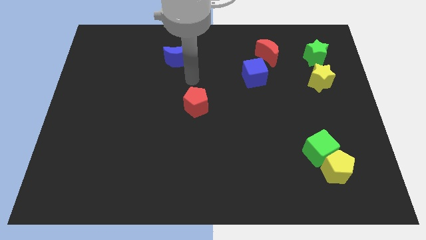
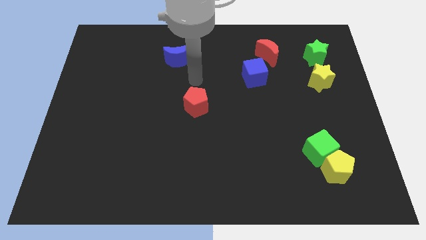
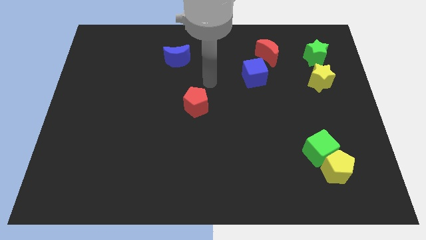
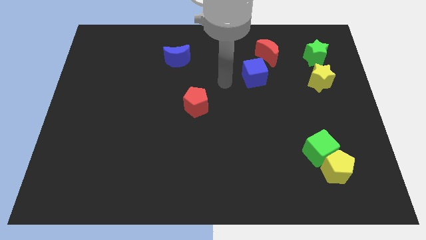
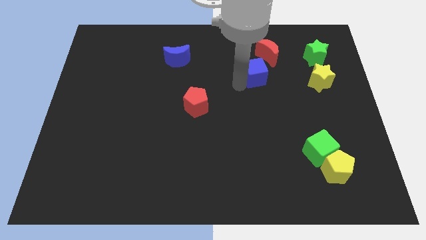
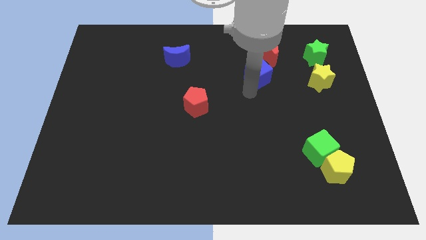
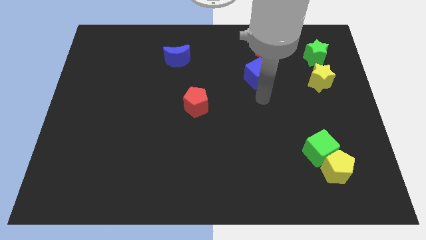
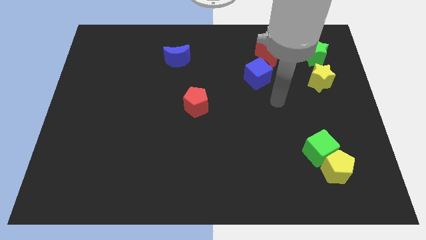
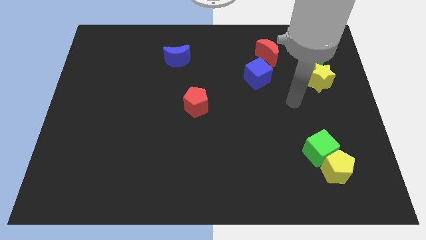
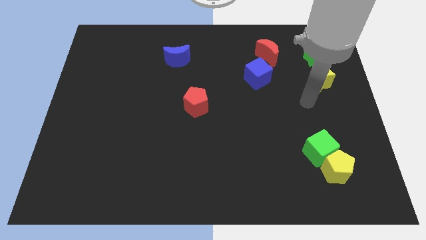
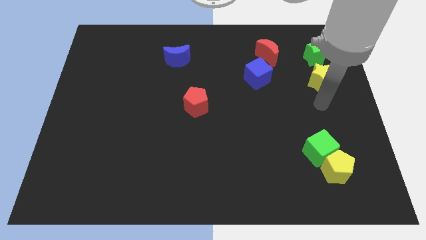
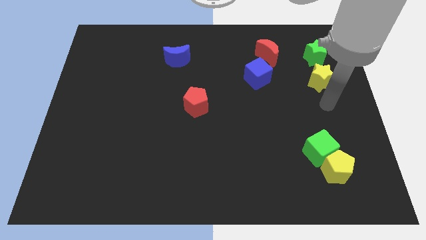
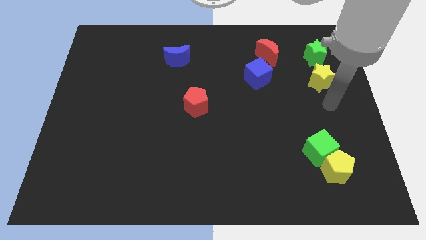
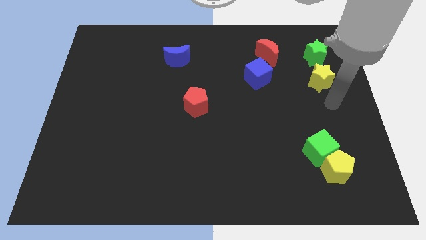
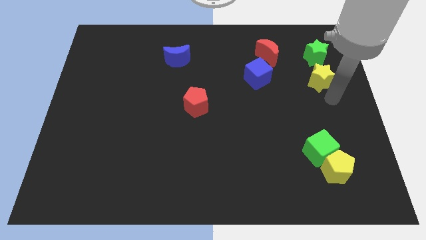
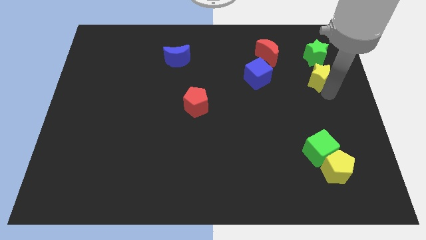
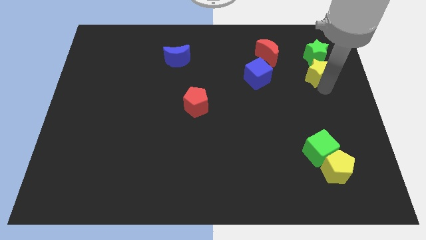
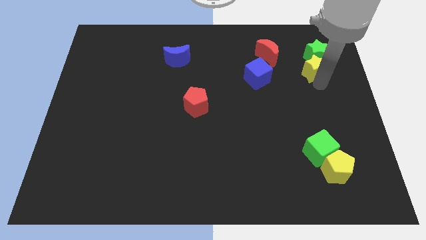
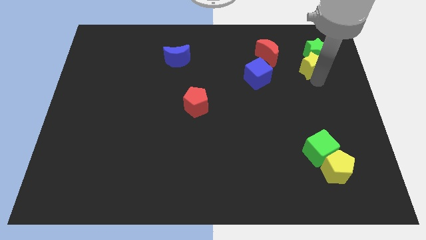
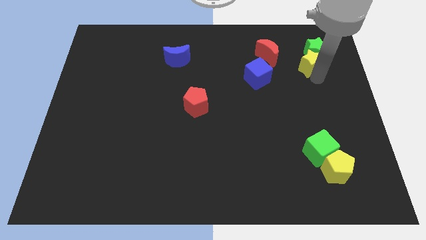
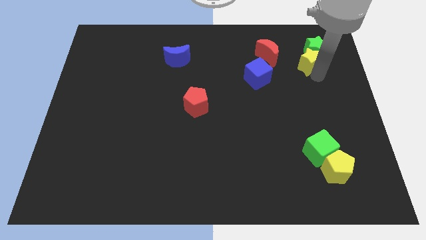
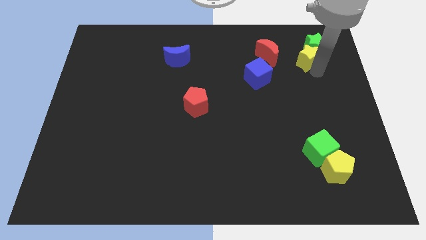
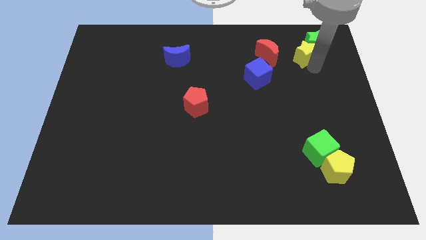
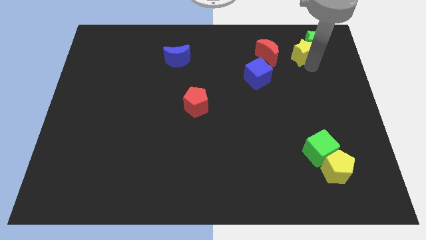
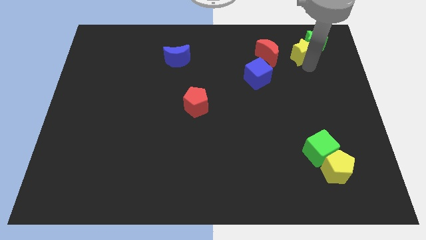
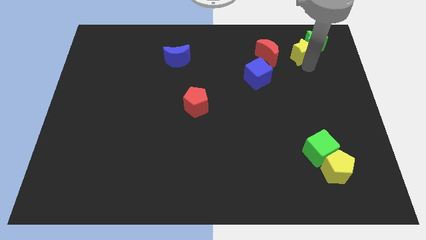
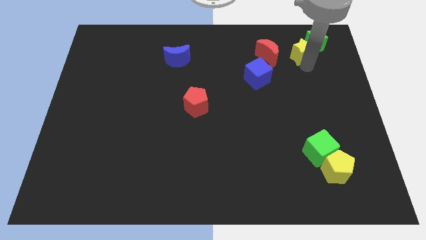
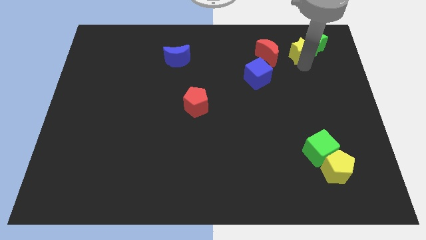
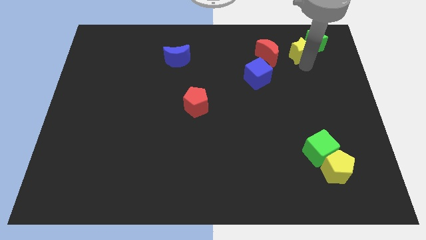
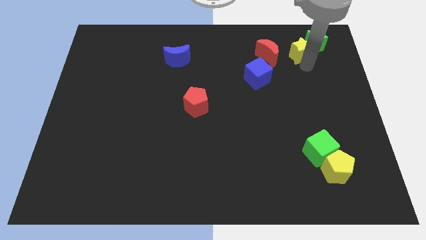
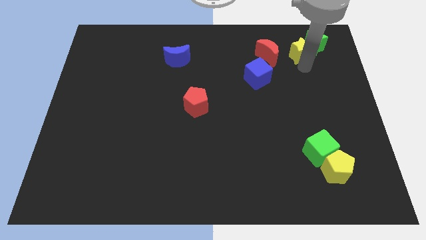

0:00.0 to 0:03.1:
place yellow star to the right of red moon

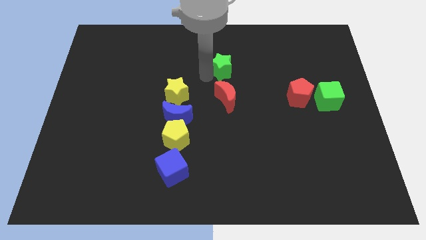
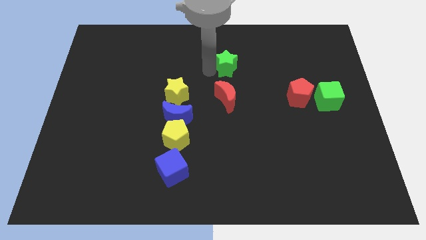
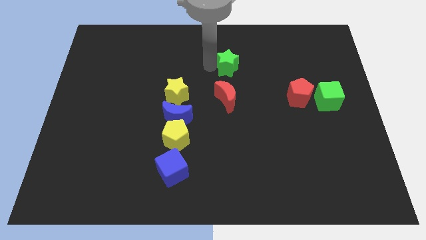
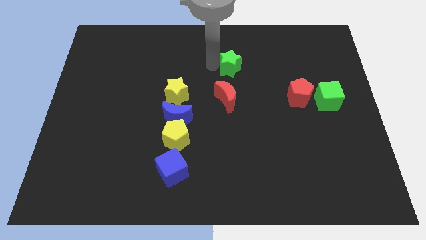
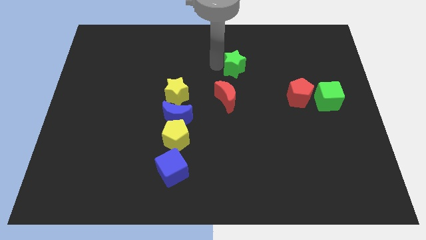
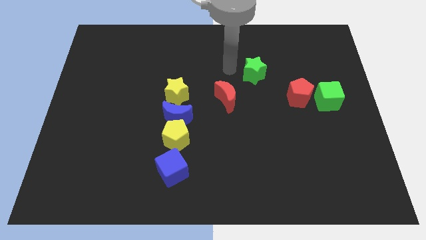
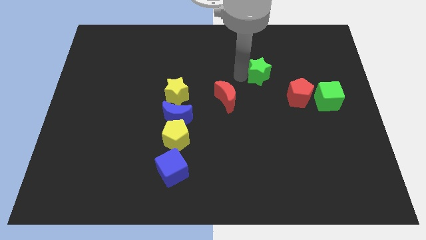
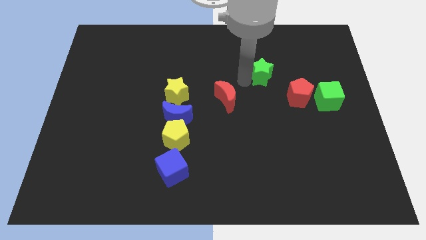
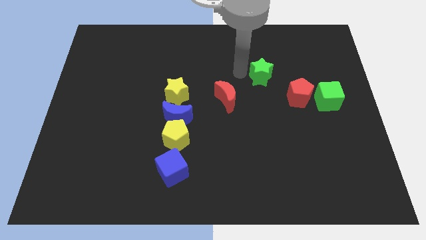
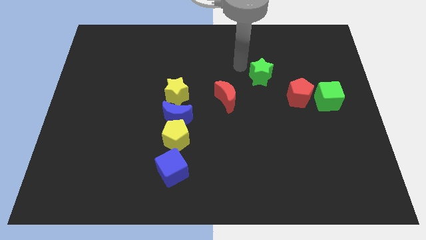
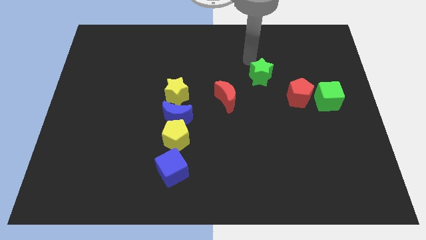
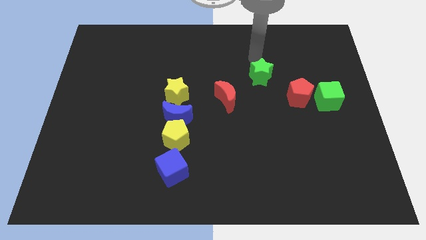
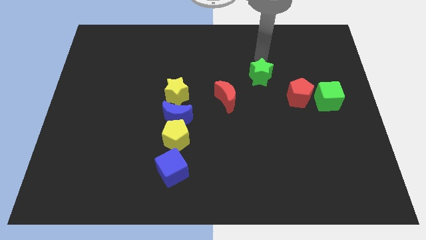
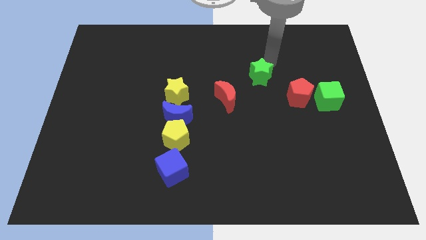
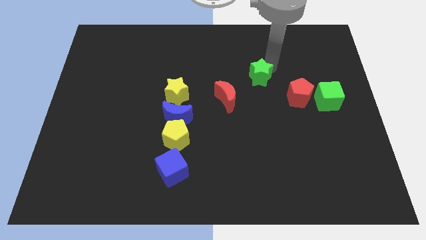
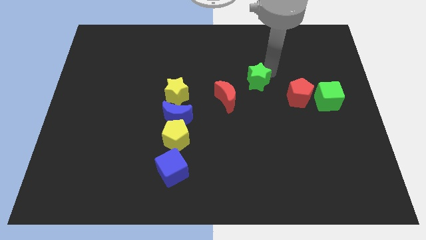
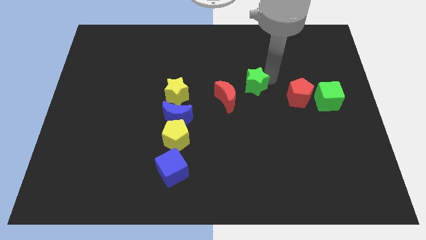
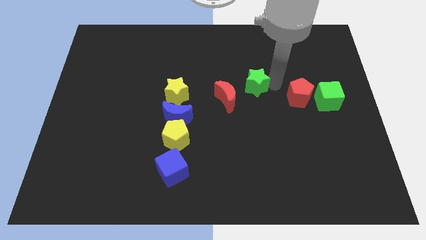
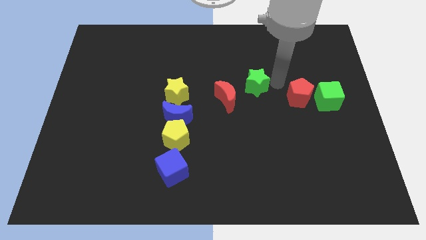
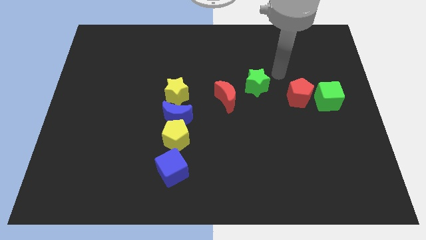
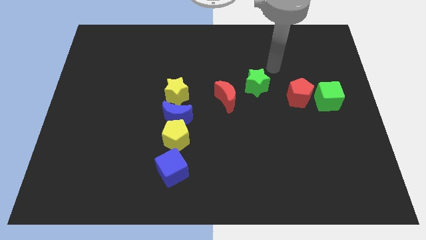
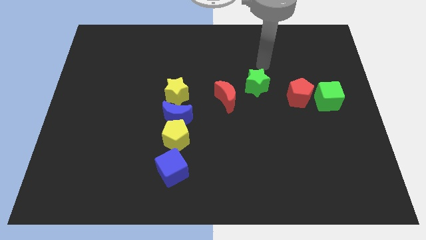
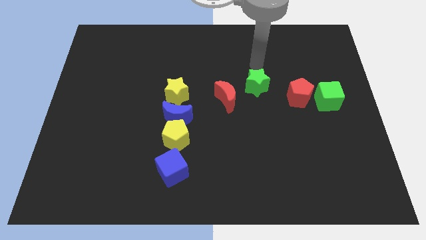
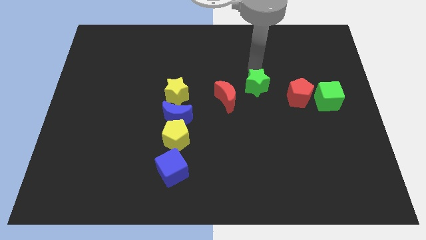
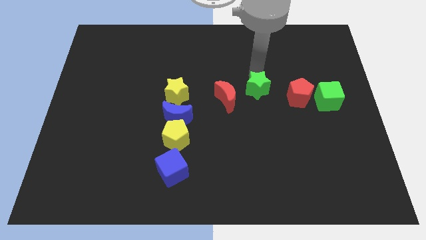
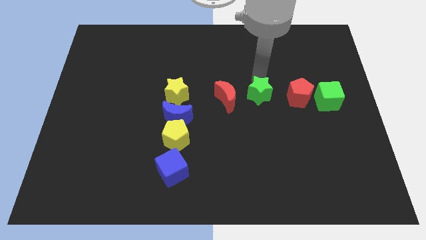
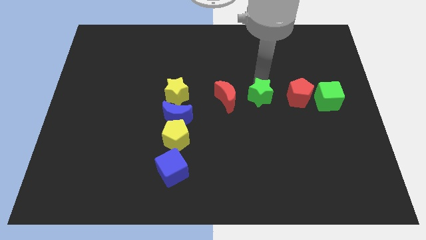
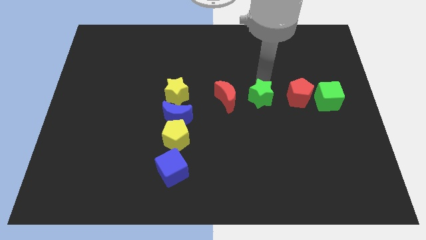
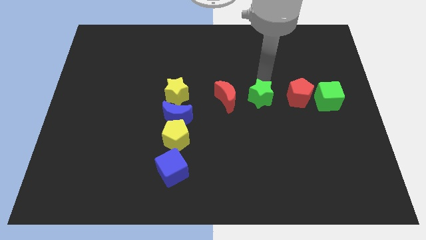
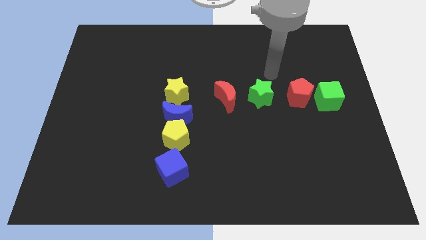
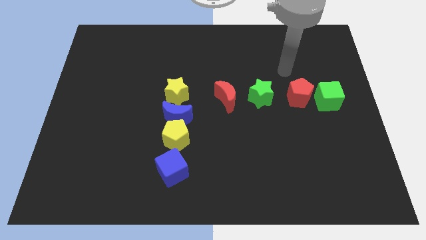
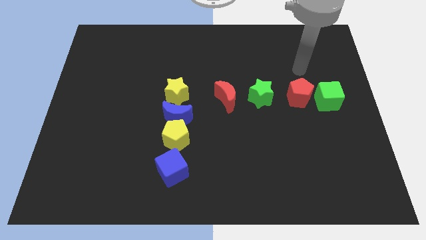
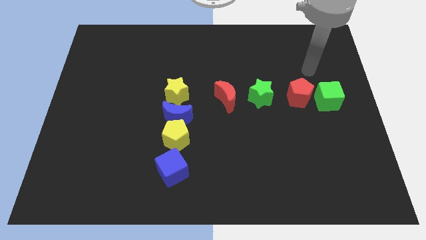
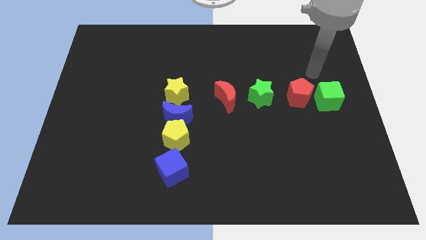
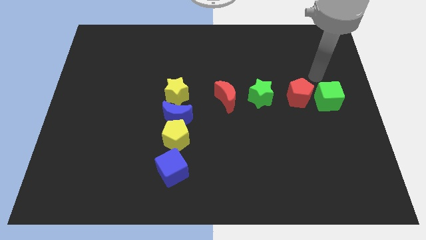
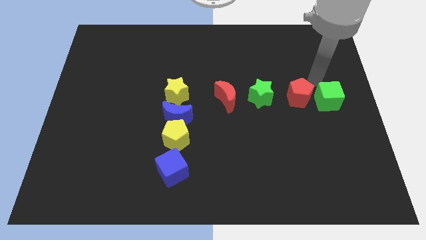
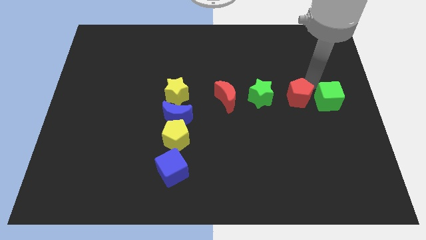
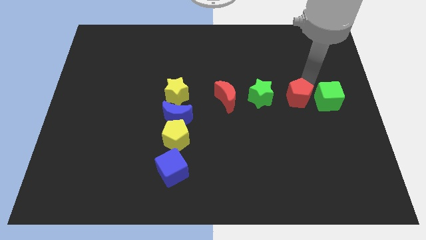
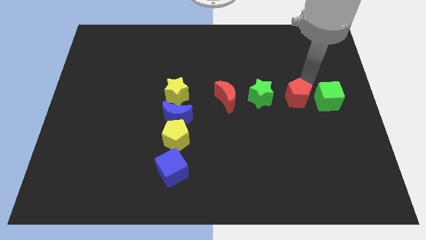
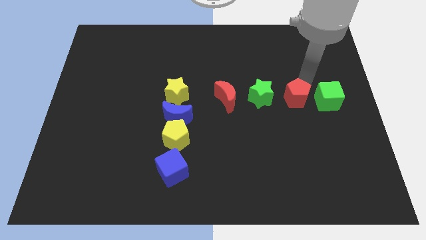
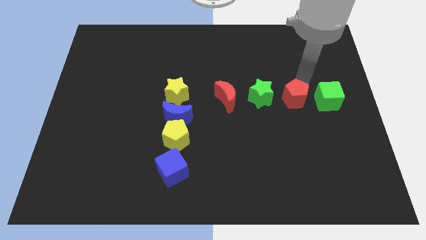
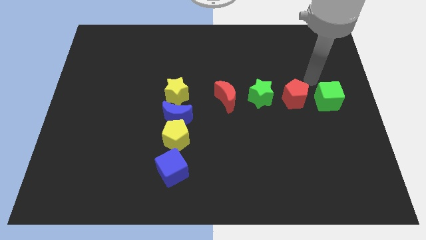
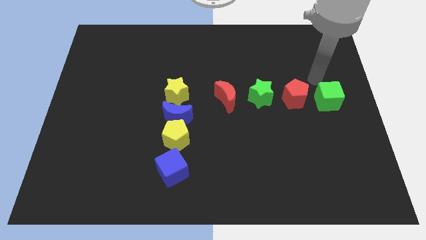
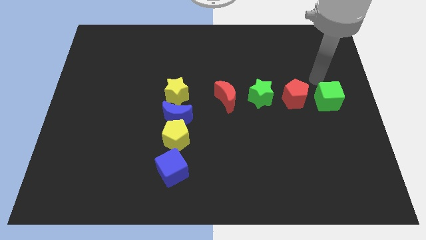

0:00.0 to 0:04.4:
place the green star in between two red blocks

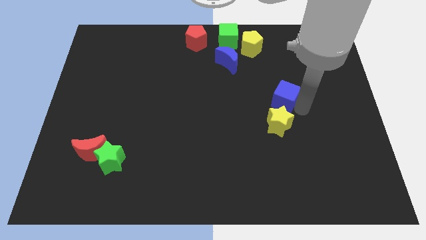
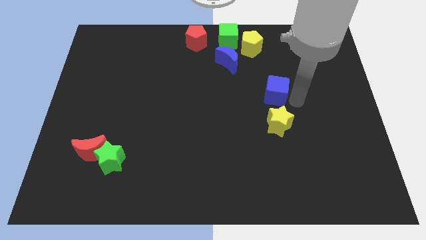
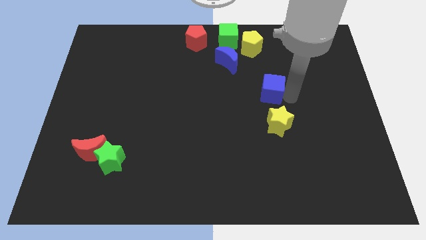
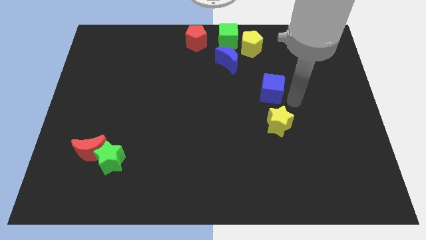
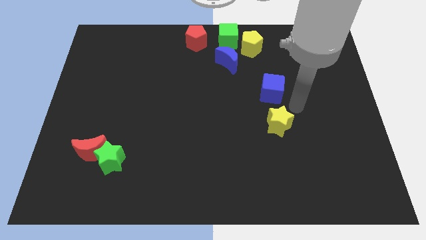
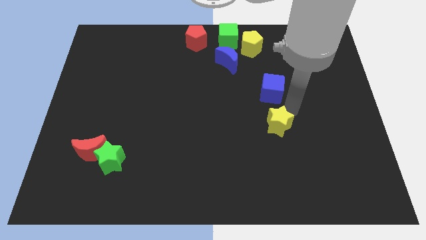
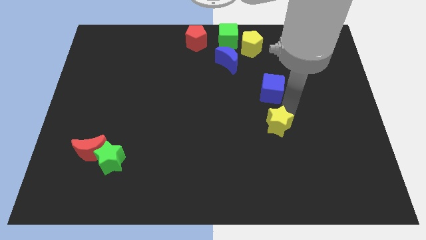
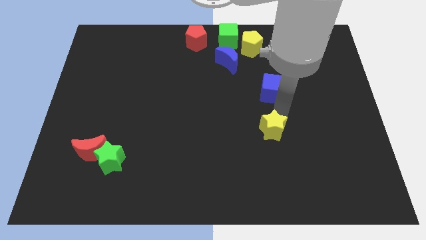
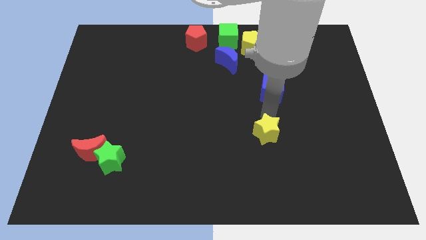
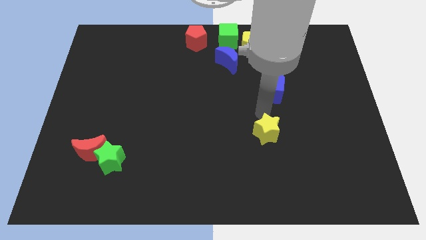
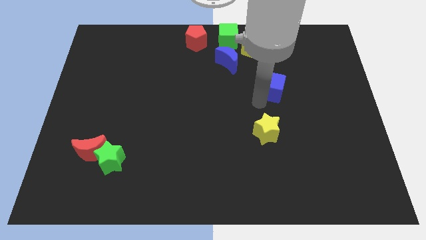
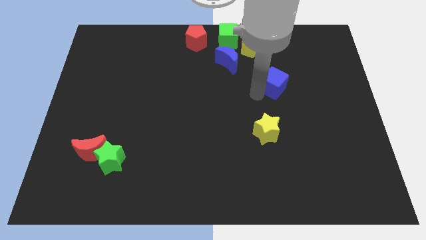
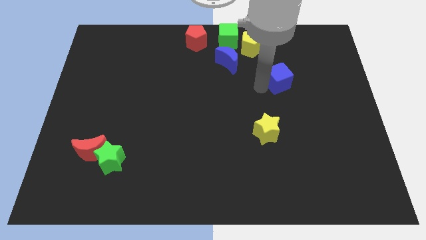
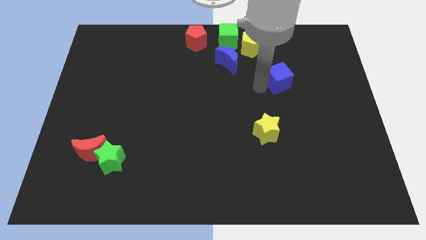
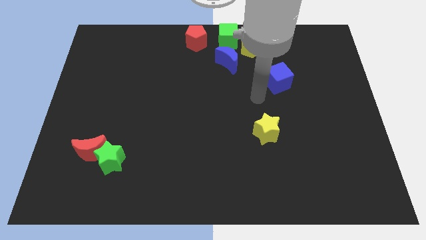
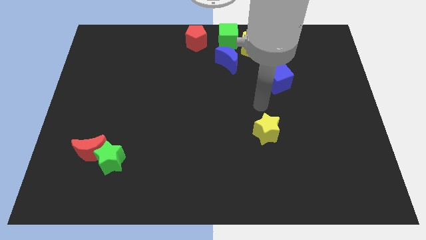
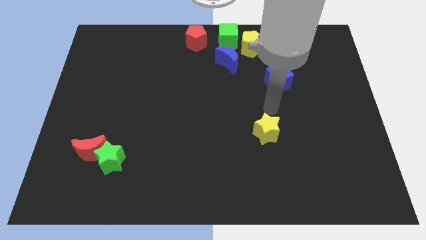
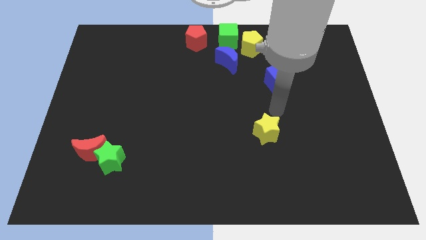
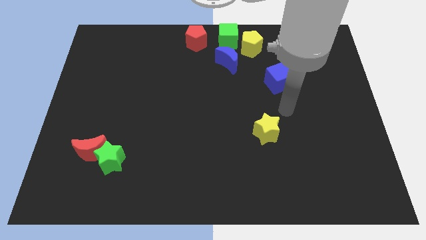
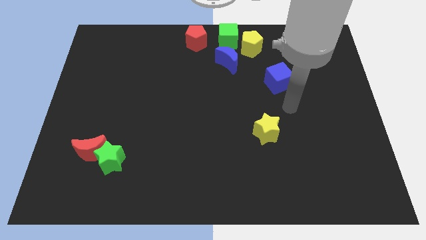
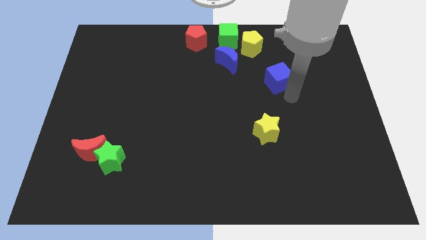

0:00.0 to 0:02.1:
separate the blue cube and yellow star
